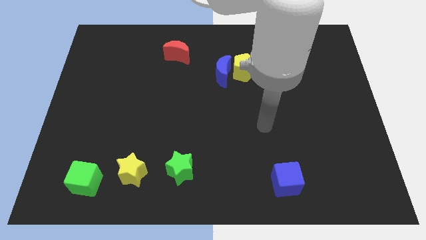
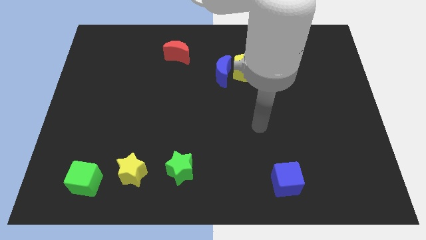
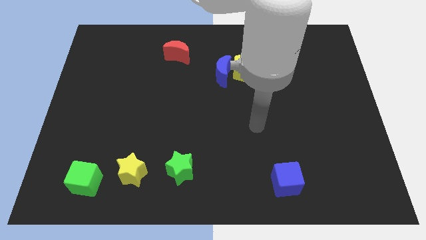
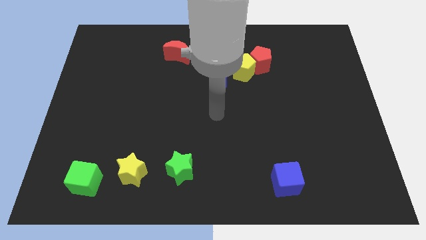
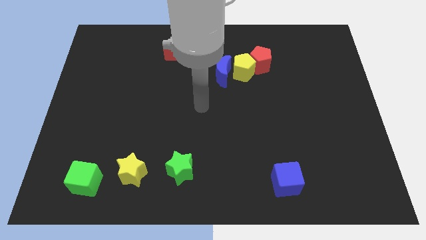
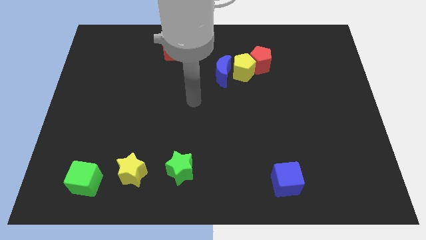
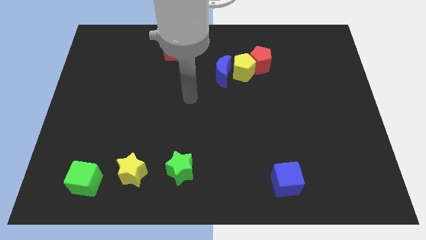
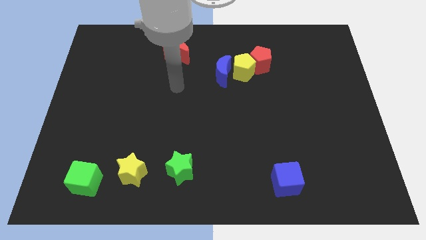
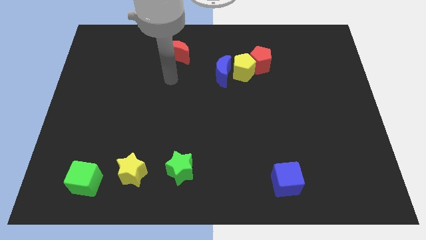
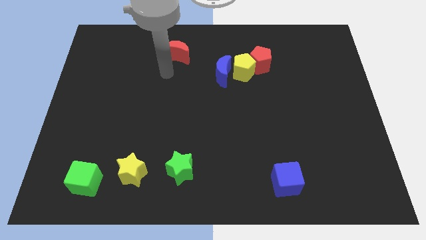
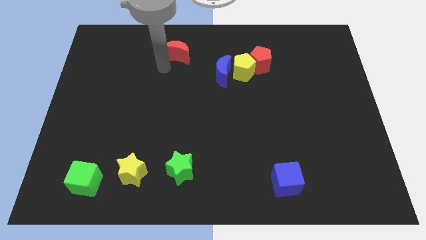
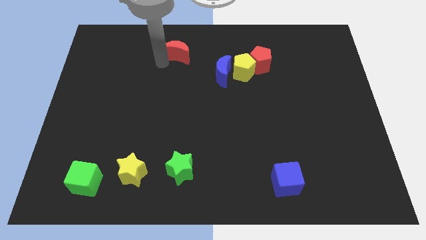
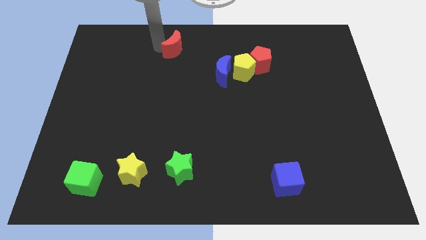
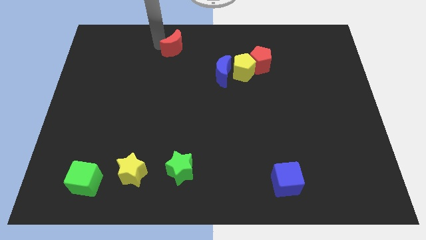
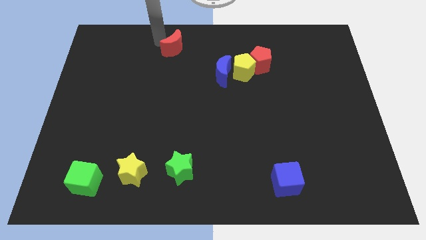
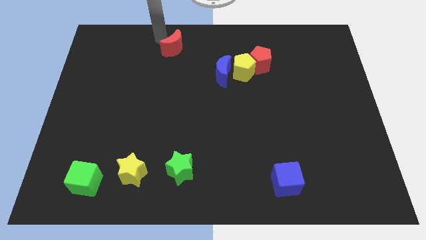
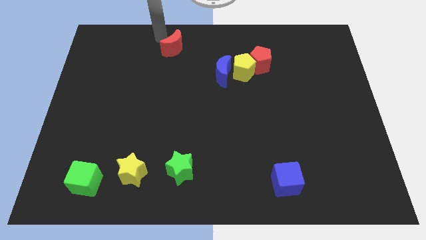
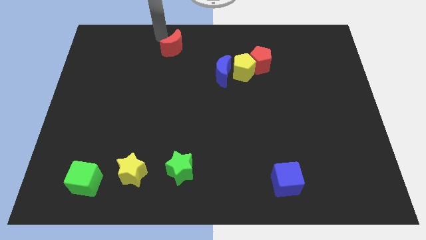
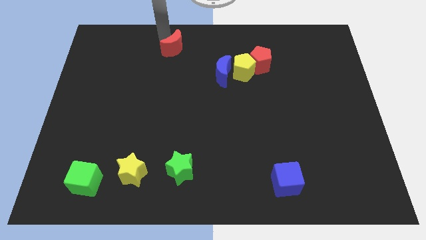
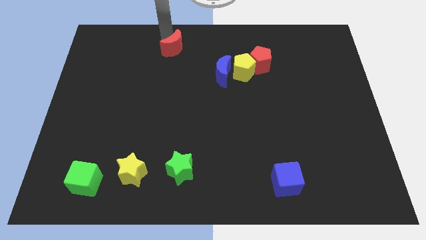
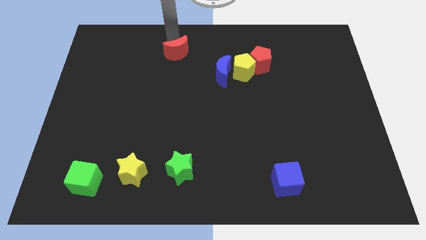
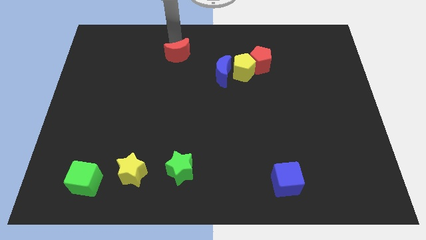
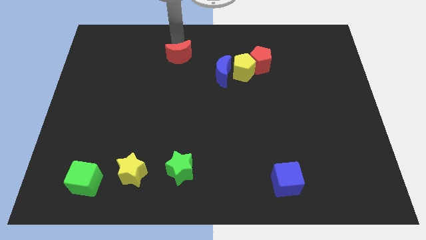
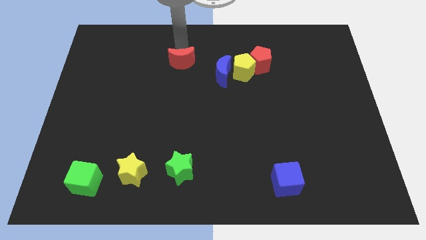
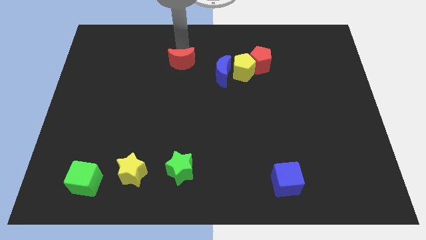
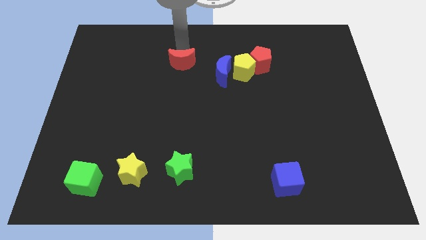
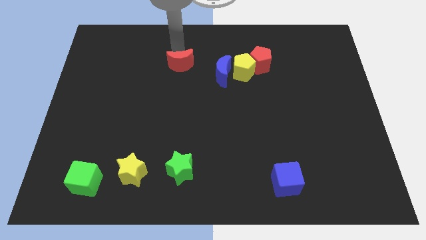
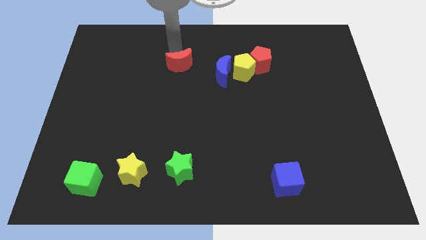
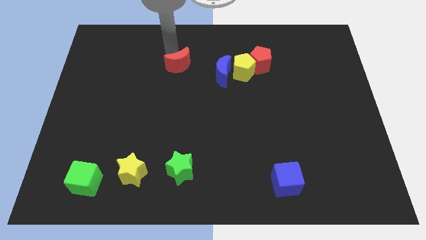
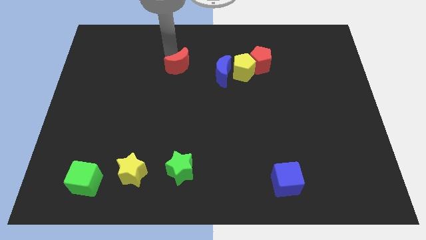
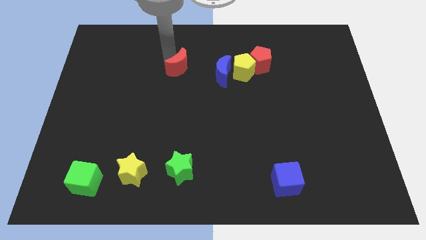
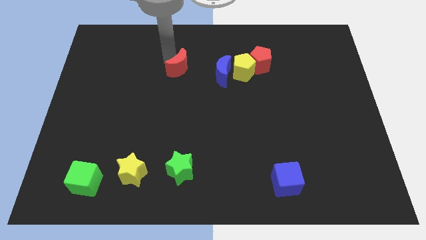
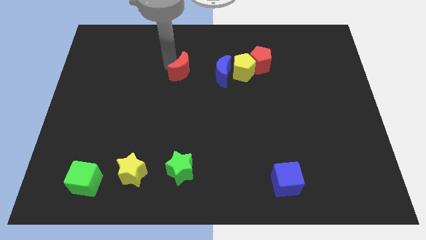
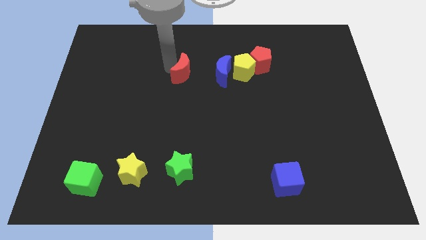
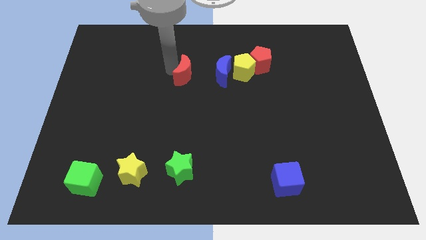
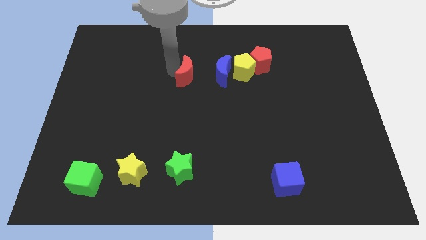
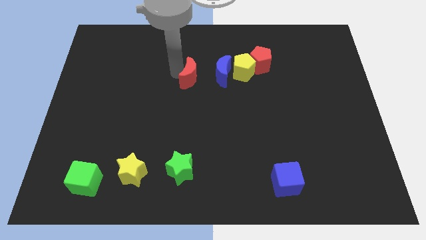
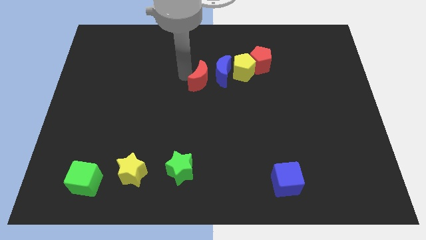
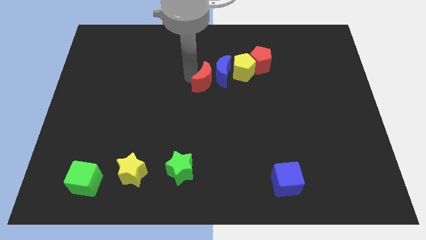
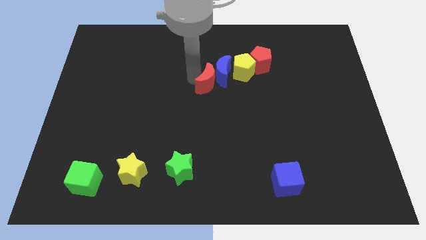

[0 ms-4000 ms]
slide the red moon towards the blue moon

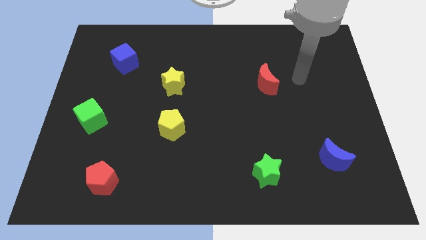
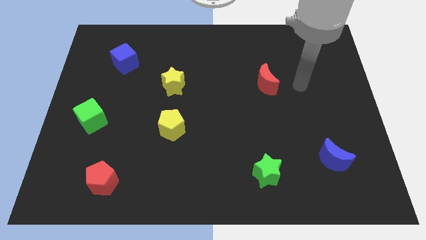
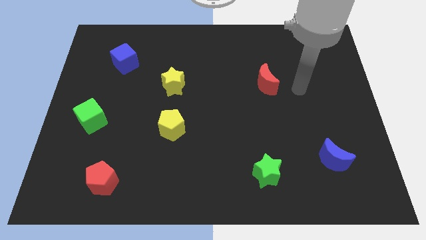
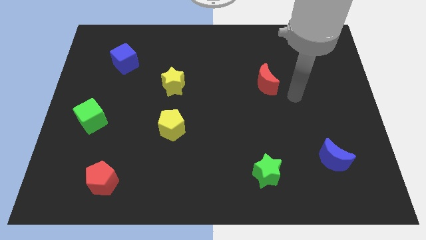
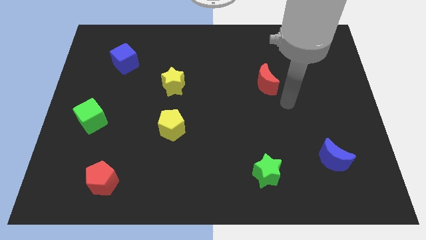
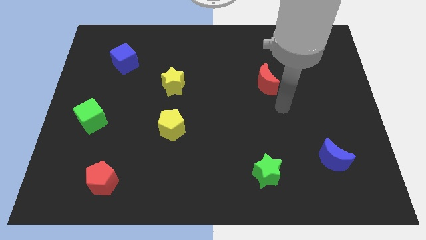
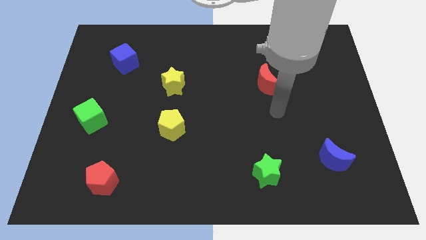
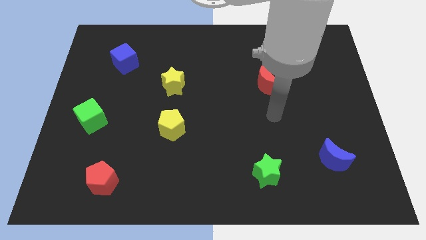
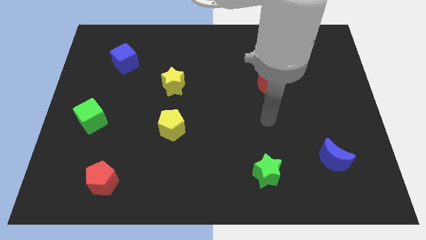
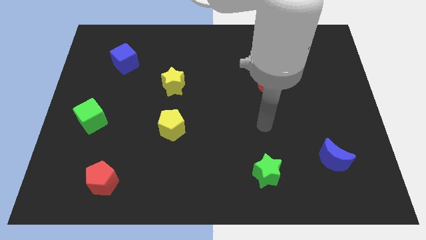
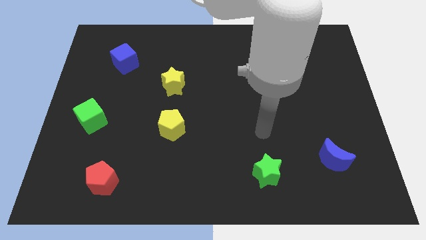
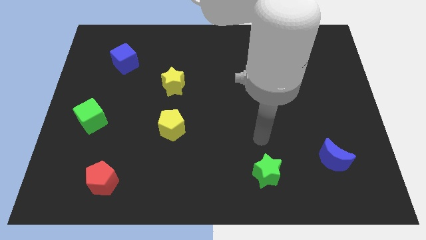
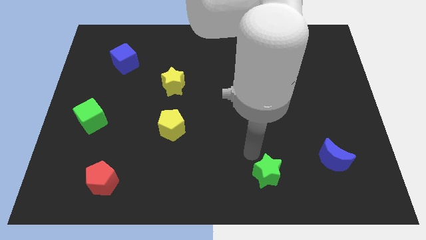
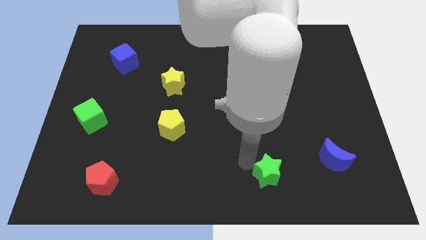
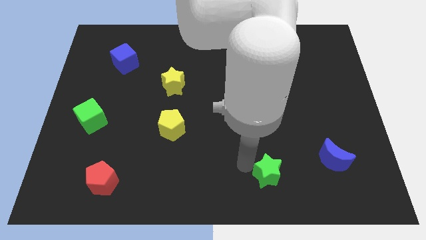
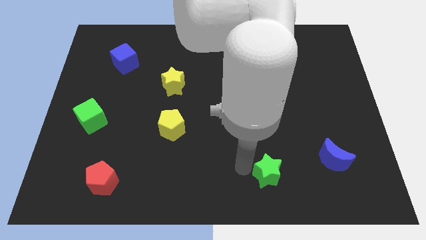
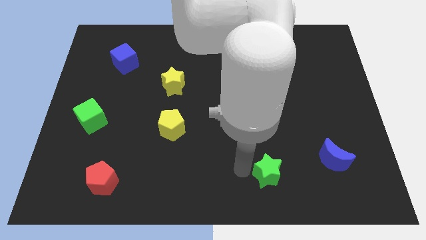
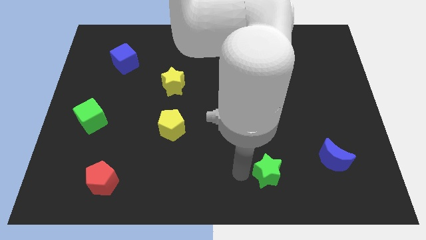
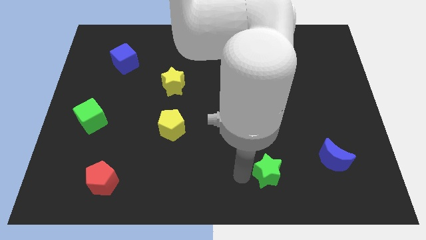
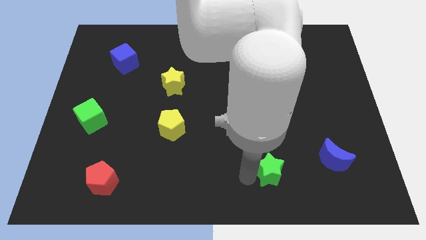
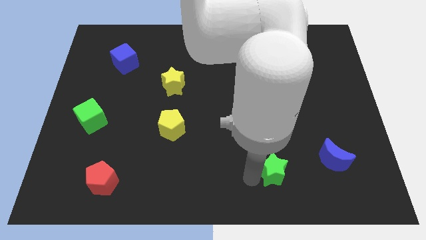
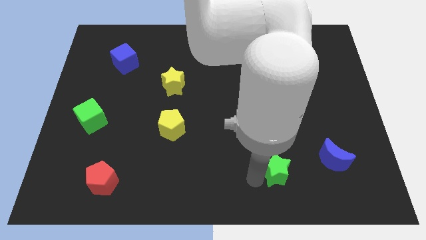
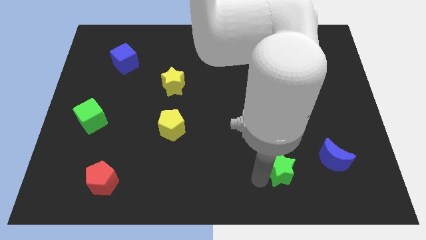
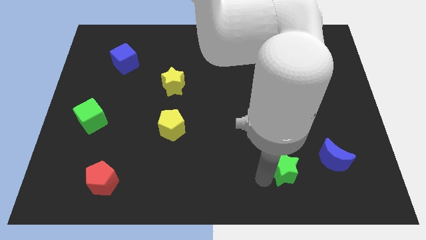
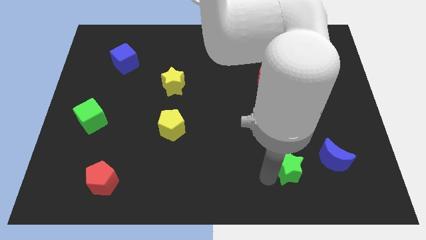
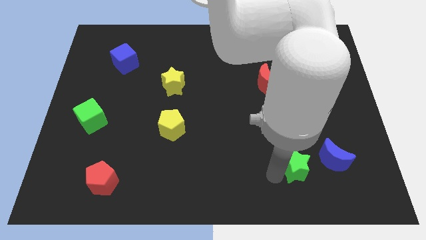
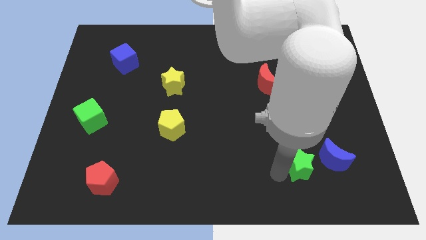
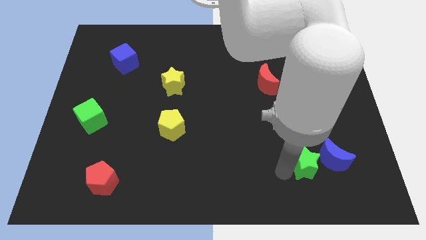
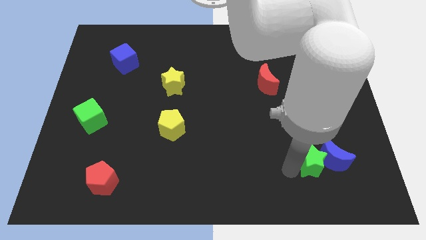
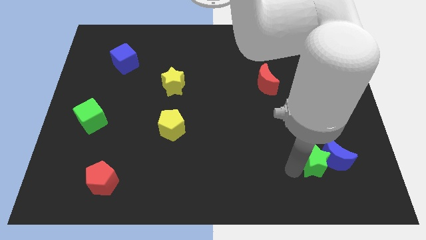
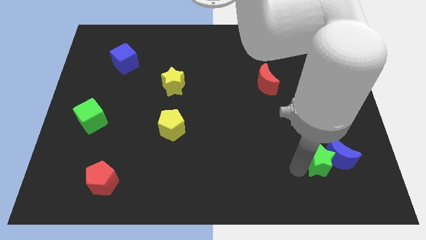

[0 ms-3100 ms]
move the green star next to the blue moon

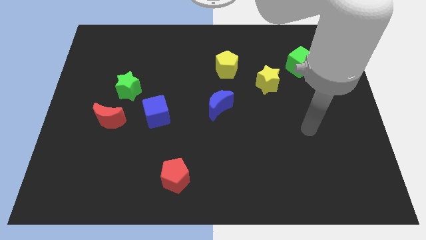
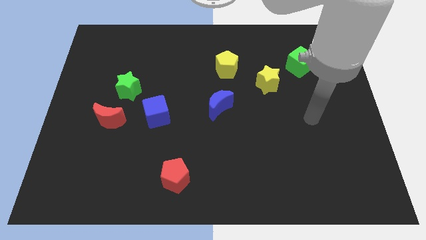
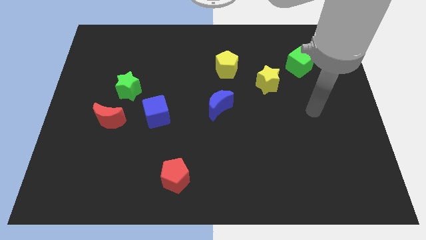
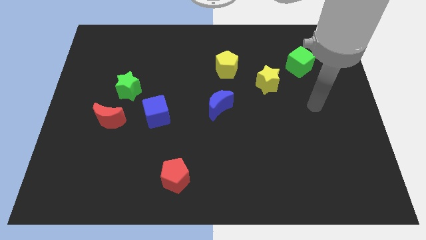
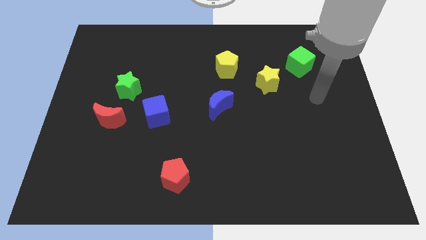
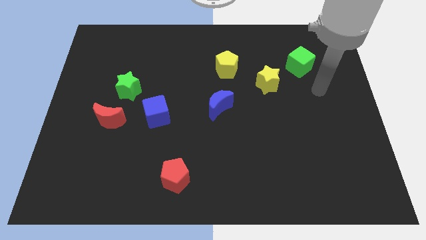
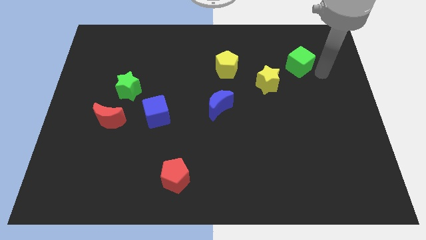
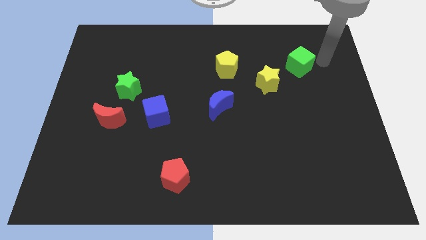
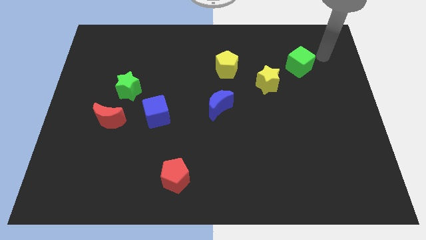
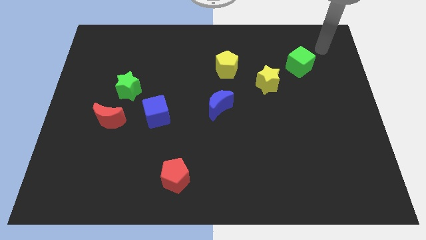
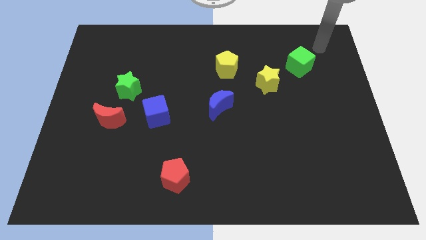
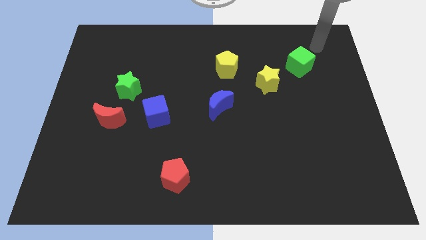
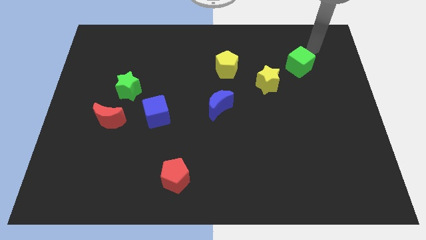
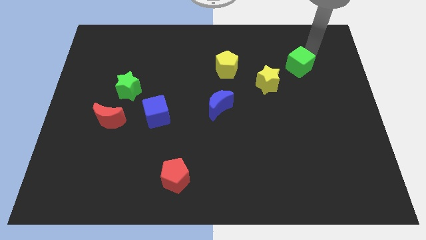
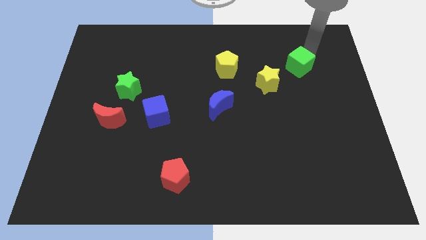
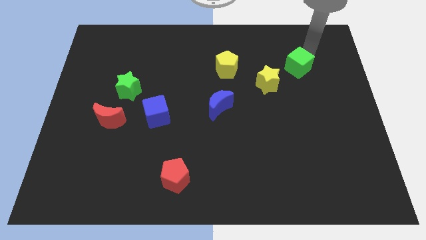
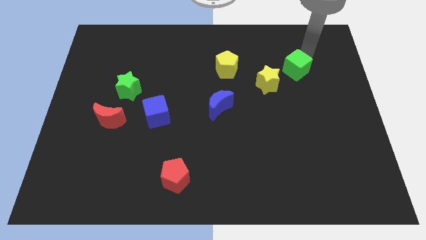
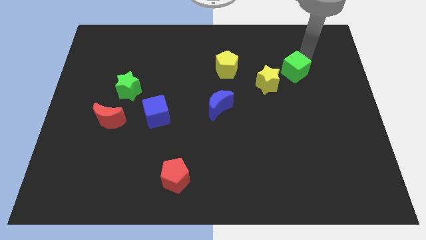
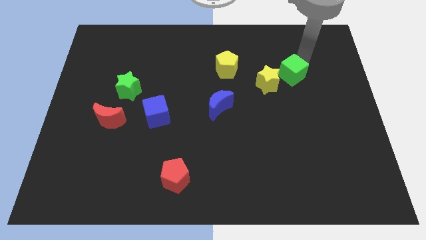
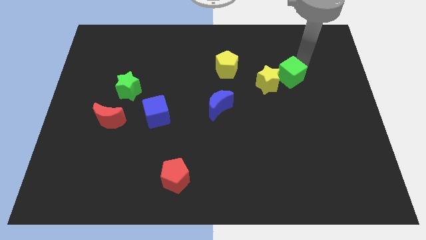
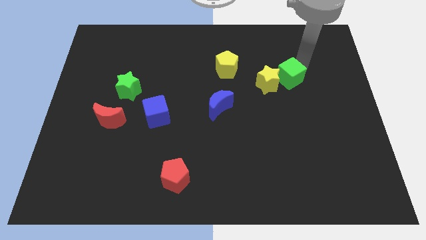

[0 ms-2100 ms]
slide the green cube close to the yellow star
